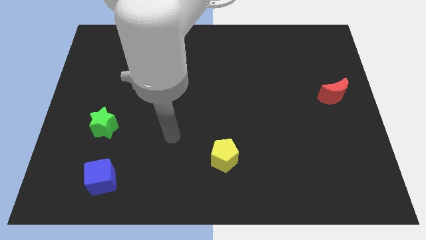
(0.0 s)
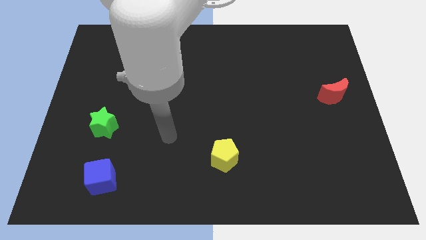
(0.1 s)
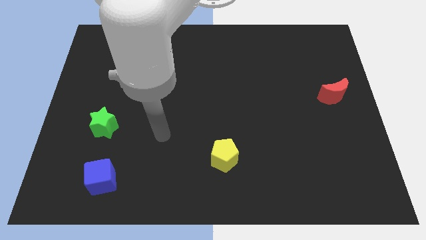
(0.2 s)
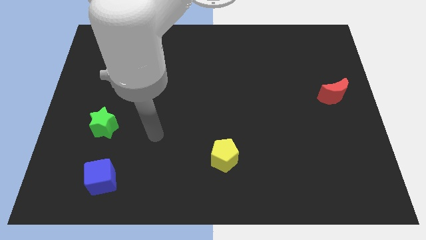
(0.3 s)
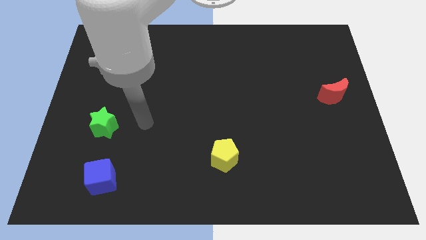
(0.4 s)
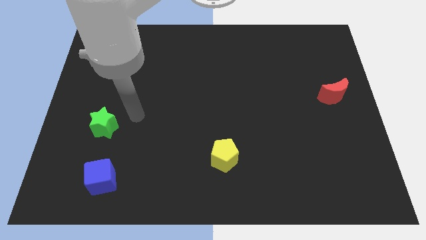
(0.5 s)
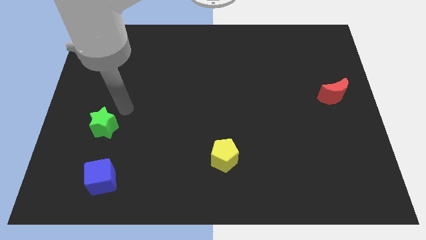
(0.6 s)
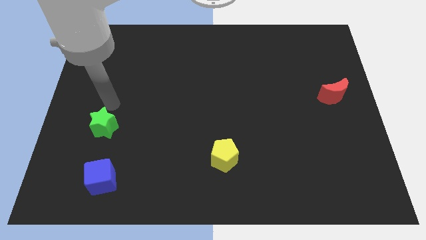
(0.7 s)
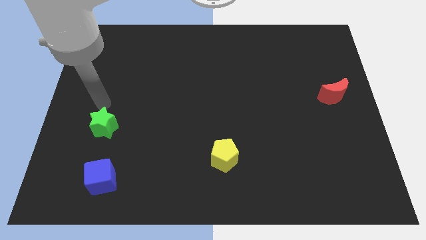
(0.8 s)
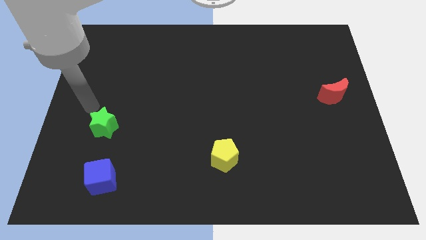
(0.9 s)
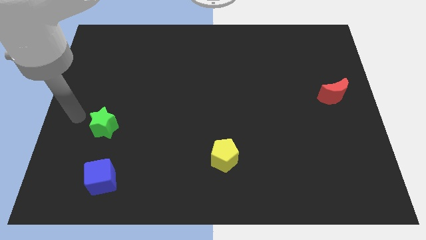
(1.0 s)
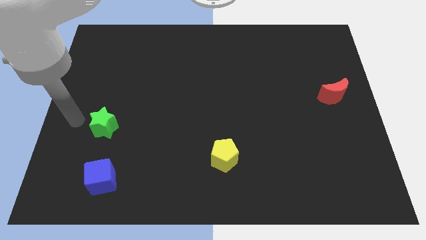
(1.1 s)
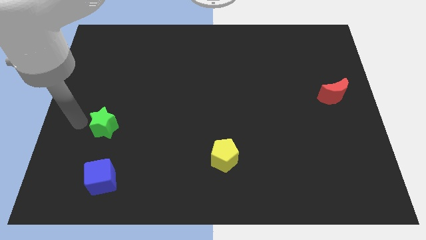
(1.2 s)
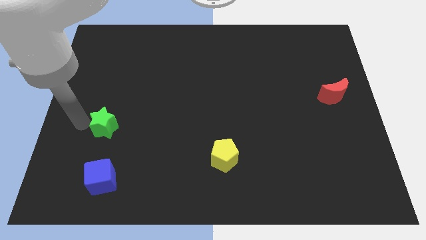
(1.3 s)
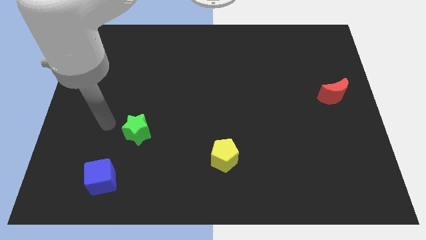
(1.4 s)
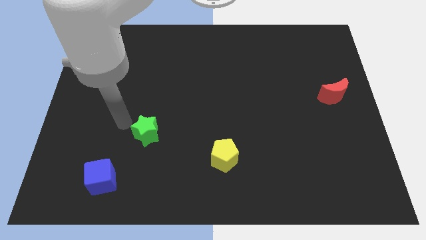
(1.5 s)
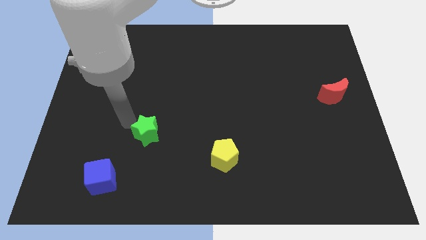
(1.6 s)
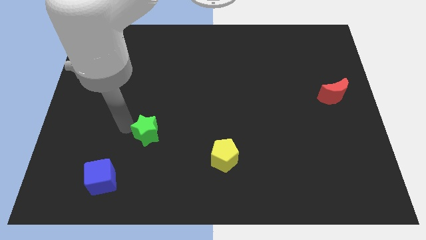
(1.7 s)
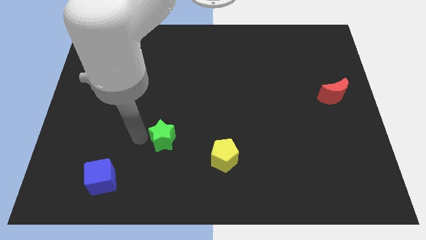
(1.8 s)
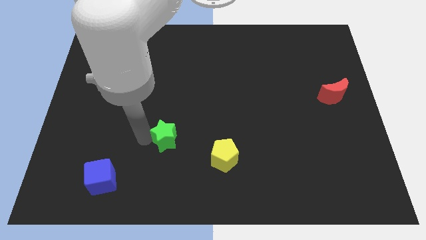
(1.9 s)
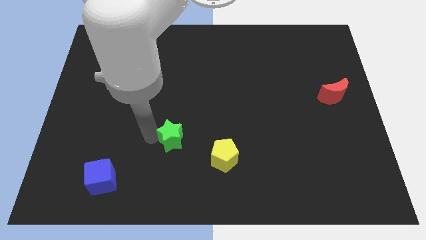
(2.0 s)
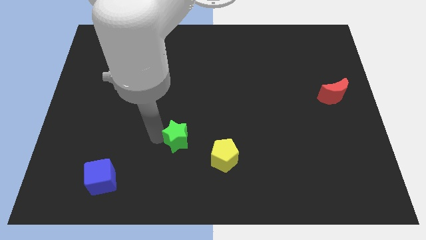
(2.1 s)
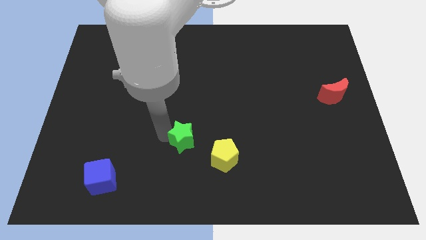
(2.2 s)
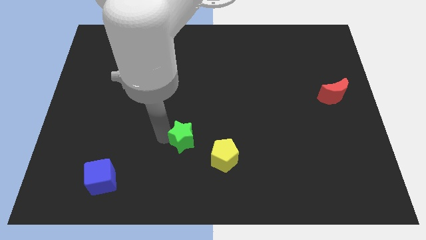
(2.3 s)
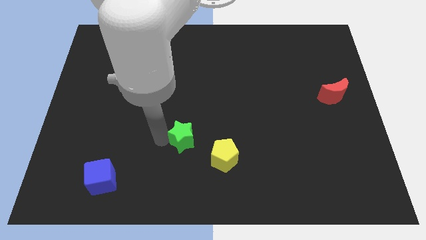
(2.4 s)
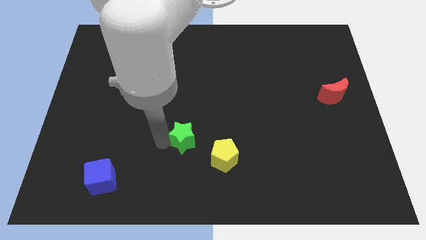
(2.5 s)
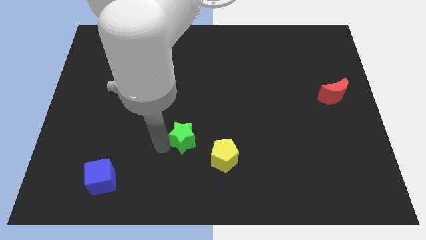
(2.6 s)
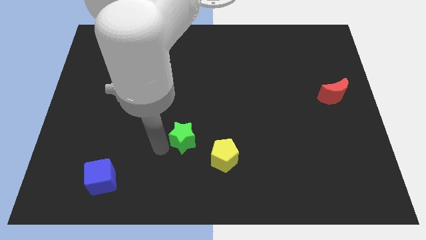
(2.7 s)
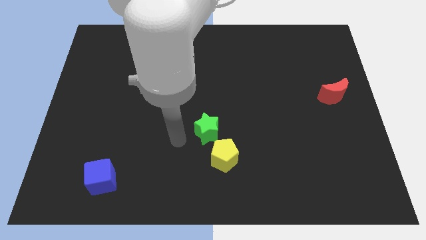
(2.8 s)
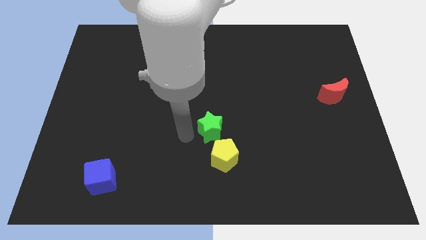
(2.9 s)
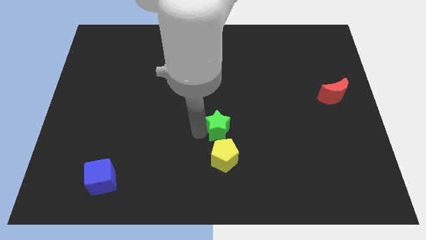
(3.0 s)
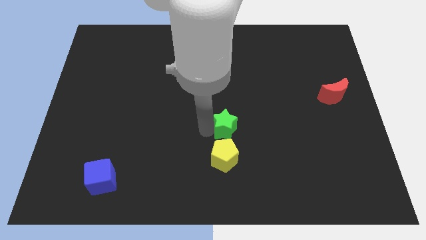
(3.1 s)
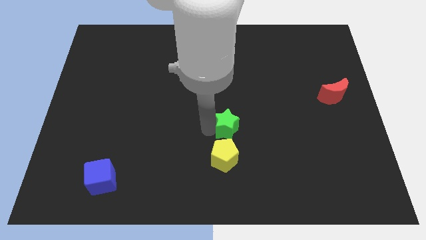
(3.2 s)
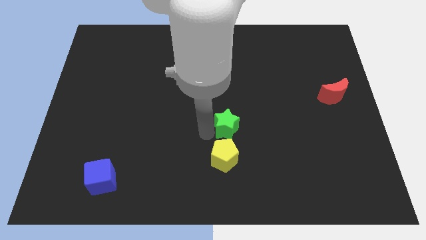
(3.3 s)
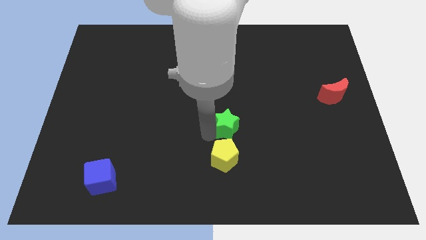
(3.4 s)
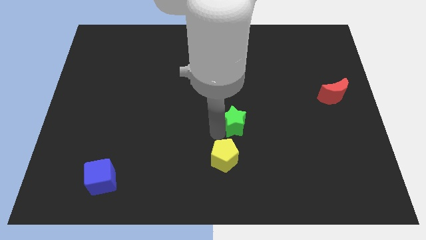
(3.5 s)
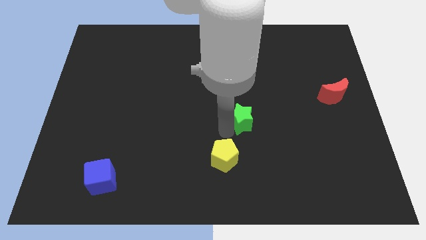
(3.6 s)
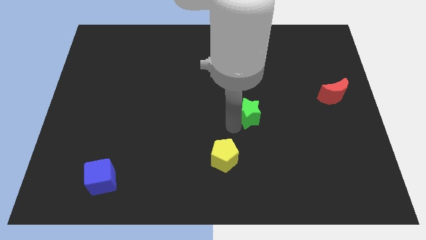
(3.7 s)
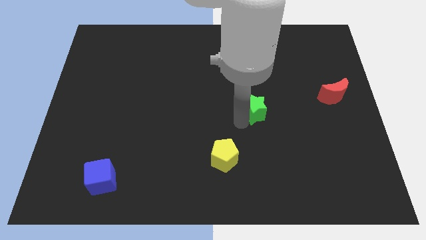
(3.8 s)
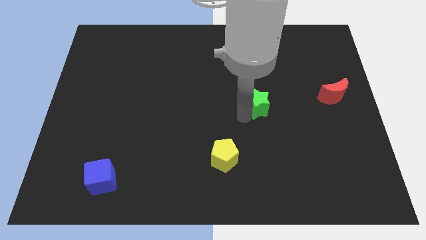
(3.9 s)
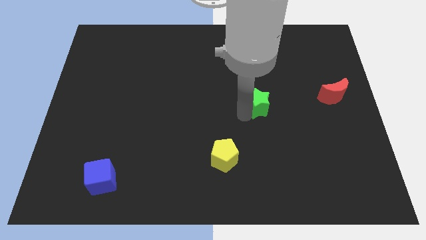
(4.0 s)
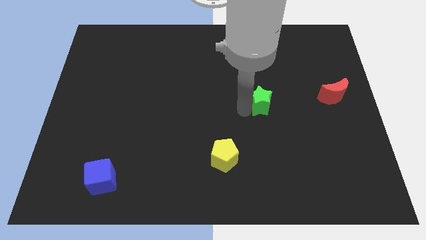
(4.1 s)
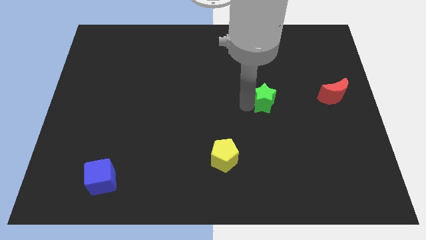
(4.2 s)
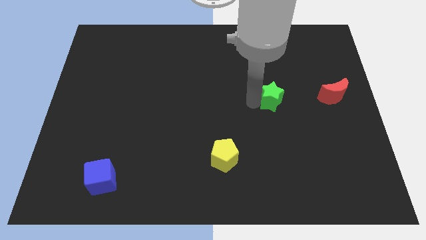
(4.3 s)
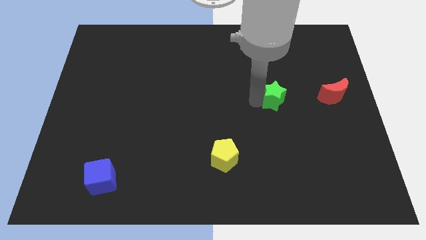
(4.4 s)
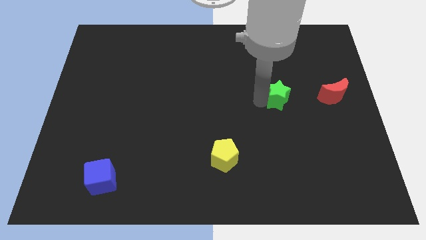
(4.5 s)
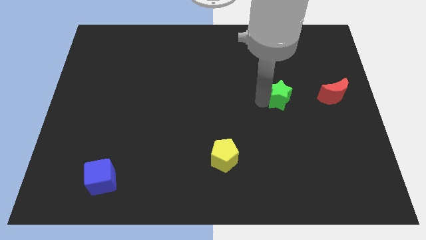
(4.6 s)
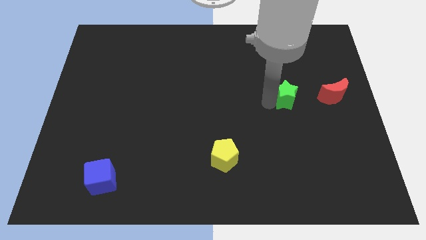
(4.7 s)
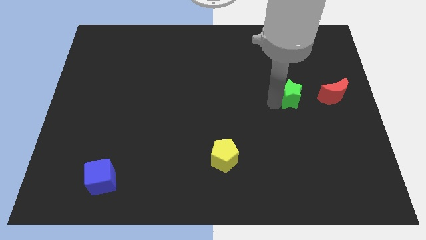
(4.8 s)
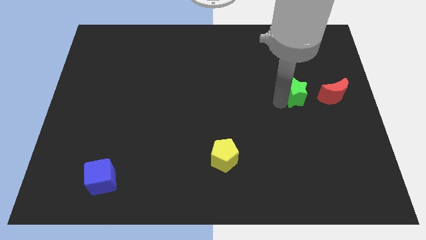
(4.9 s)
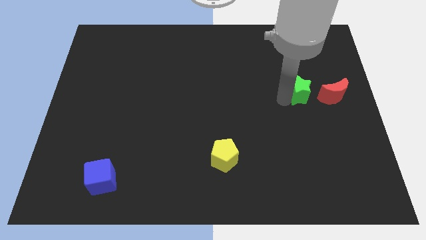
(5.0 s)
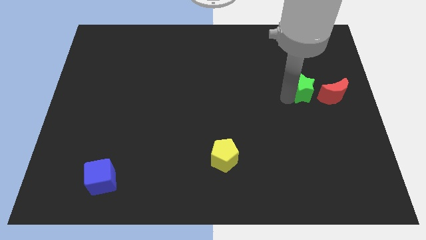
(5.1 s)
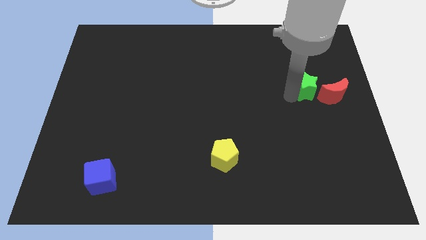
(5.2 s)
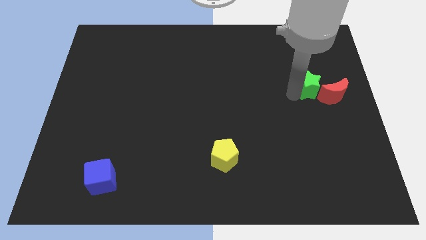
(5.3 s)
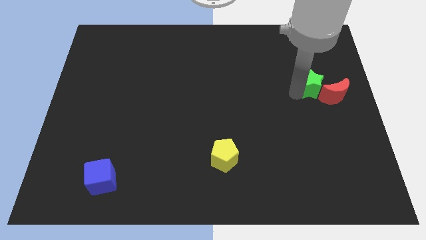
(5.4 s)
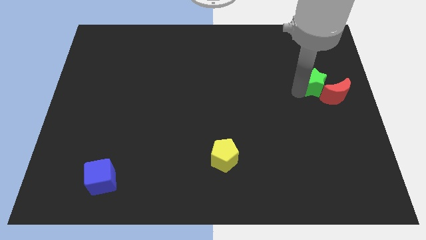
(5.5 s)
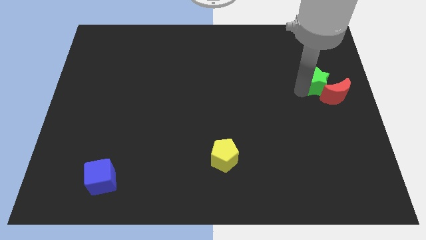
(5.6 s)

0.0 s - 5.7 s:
move the green star next to the red moon

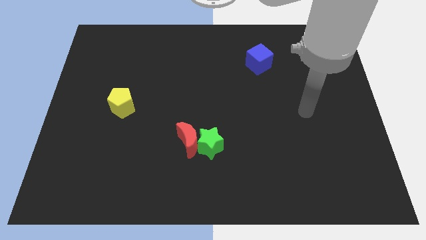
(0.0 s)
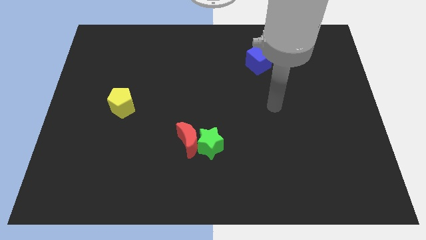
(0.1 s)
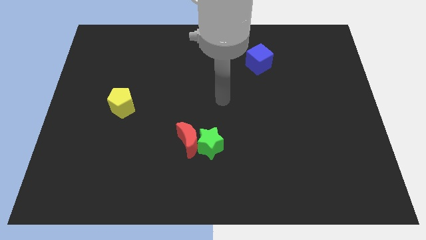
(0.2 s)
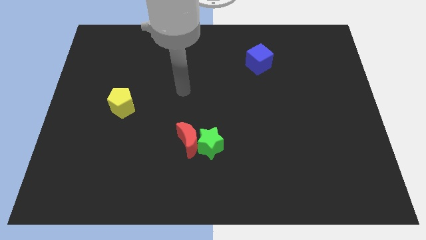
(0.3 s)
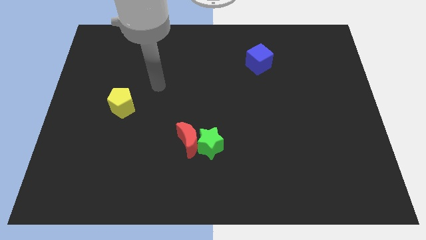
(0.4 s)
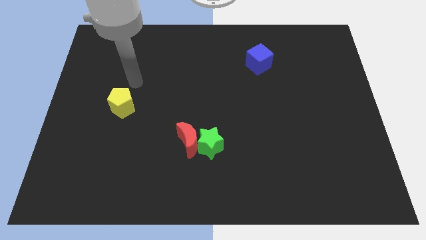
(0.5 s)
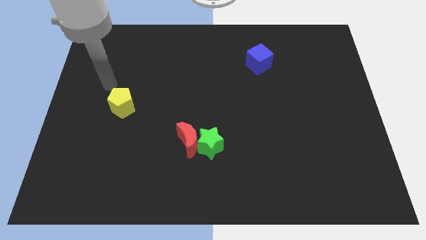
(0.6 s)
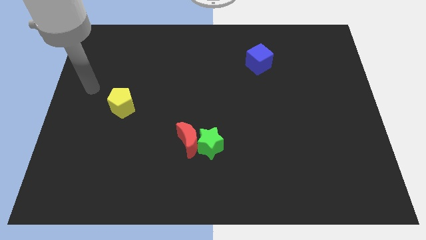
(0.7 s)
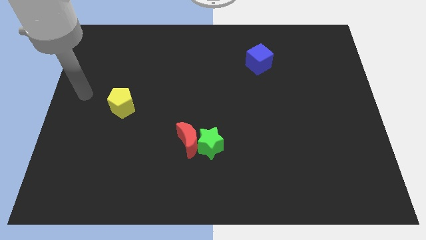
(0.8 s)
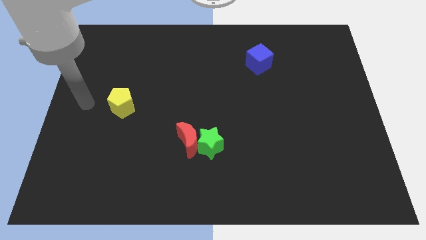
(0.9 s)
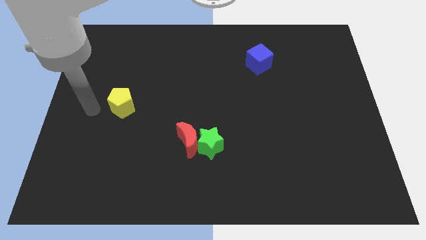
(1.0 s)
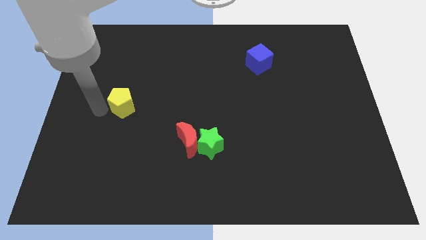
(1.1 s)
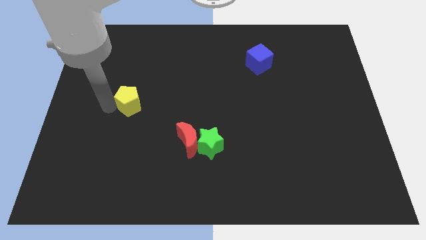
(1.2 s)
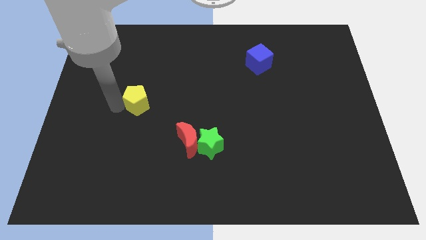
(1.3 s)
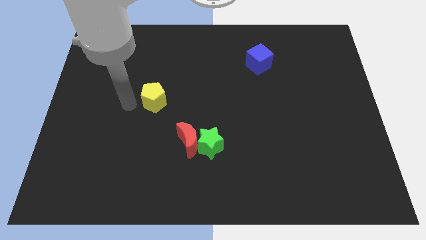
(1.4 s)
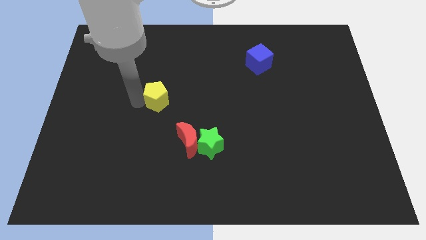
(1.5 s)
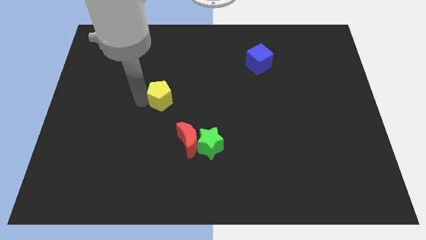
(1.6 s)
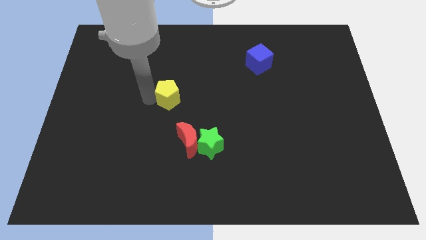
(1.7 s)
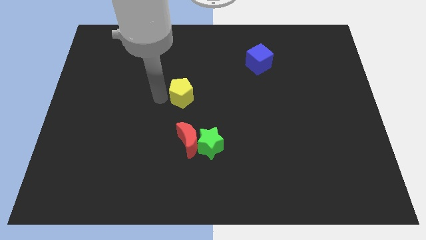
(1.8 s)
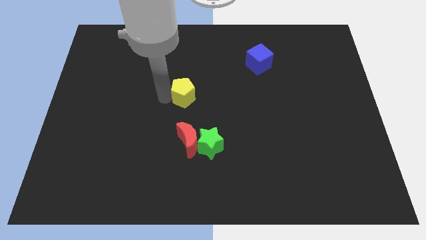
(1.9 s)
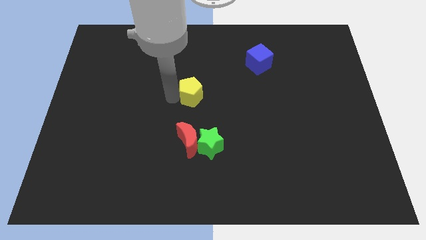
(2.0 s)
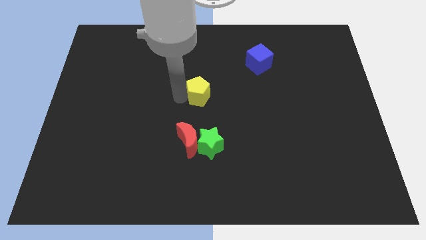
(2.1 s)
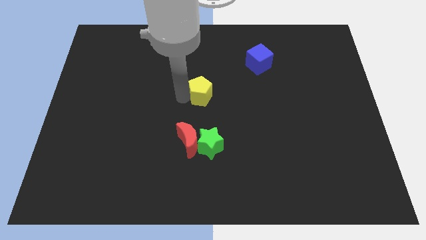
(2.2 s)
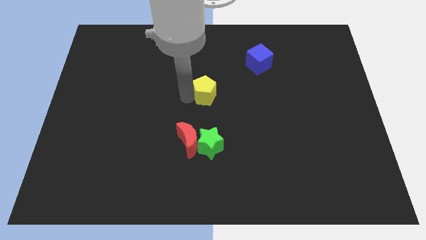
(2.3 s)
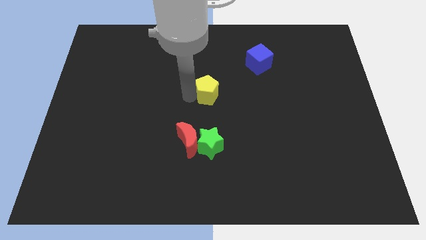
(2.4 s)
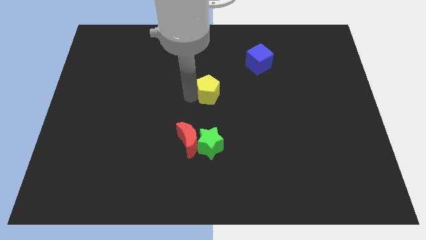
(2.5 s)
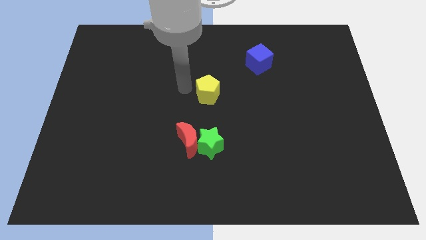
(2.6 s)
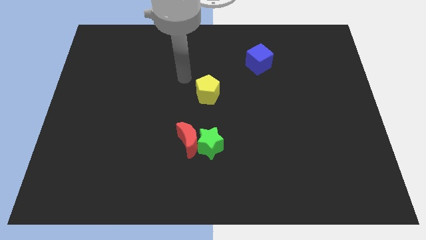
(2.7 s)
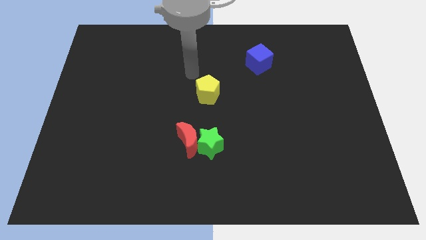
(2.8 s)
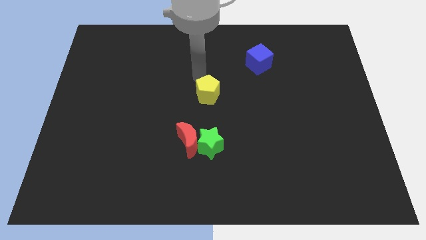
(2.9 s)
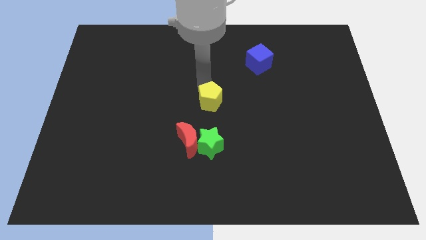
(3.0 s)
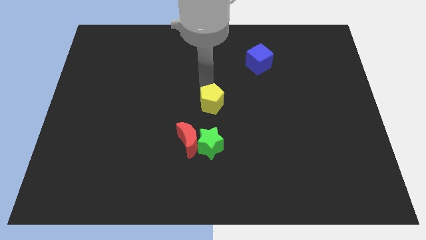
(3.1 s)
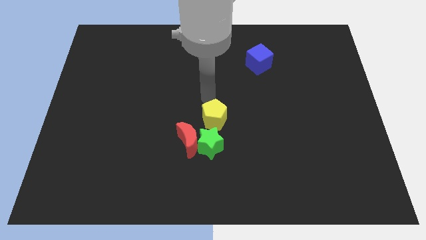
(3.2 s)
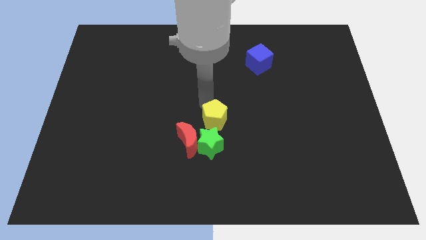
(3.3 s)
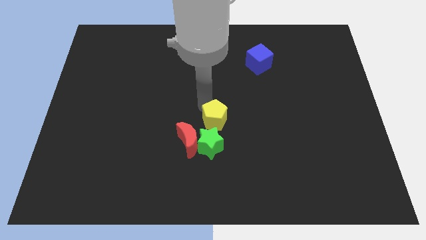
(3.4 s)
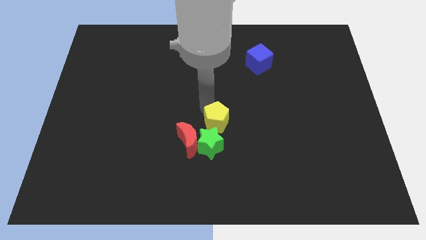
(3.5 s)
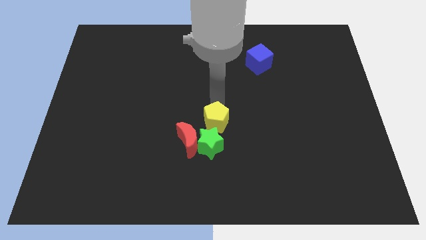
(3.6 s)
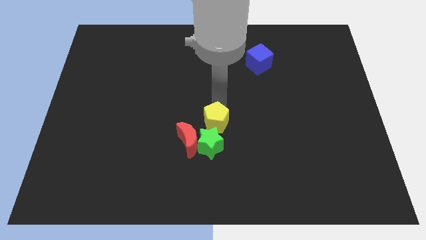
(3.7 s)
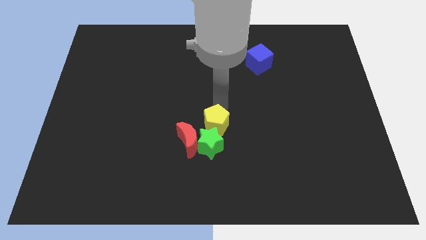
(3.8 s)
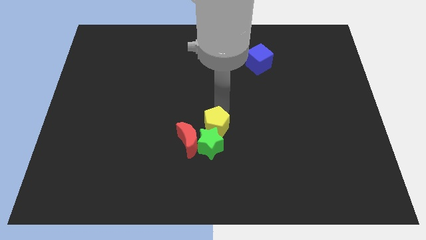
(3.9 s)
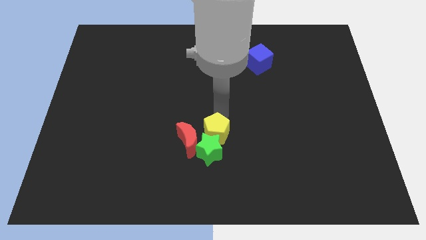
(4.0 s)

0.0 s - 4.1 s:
move the yellow block towards the green block
